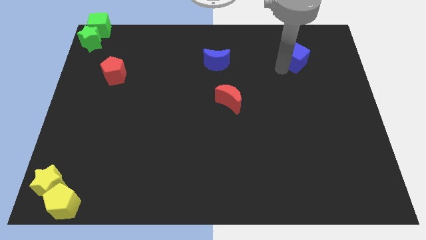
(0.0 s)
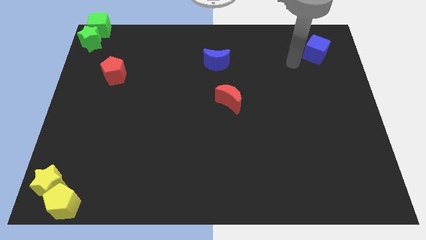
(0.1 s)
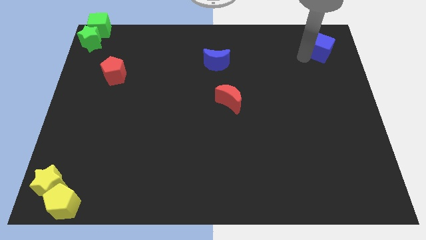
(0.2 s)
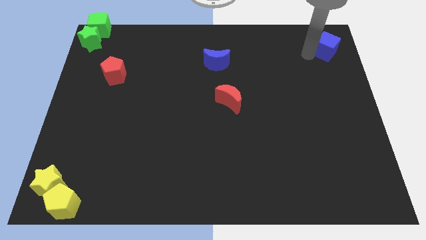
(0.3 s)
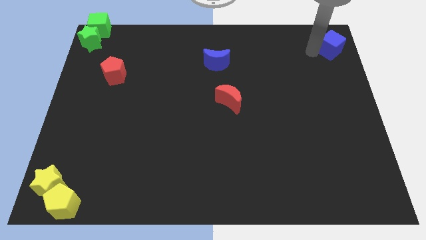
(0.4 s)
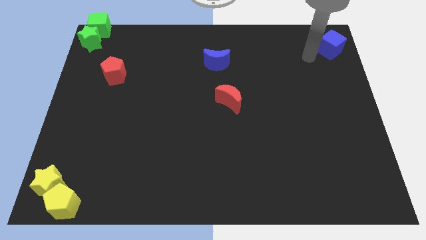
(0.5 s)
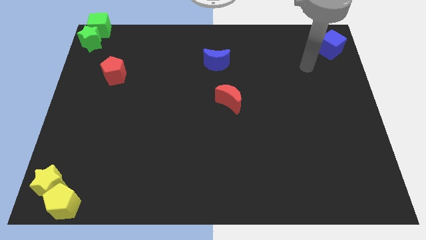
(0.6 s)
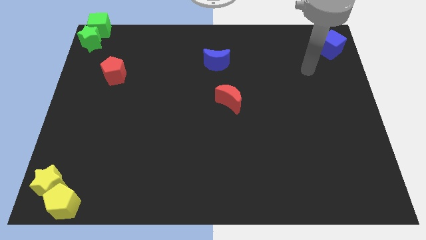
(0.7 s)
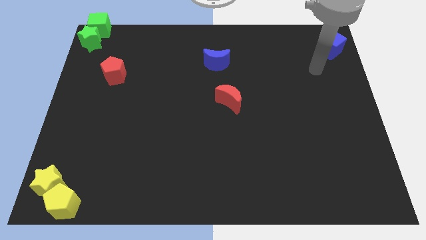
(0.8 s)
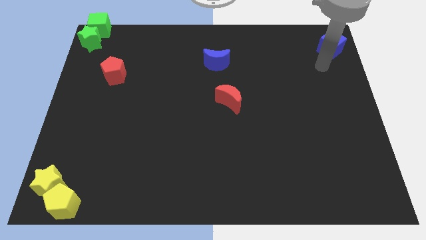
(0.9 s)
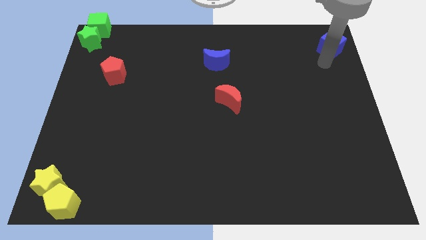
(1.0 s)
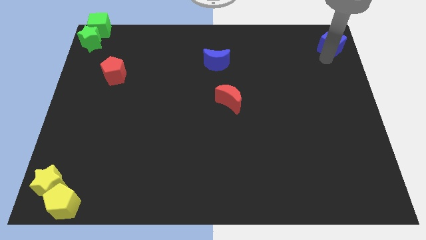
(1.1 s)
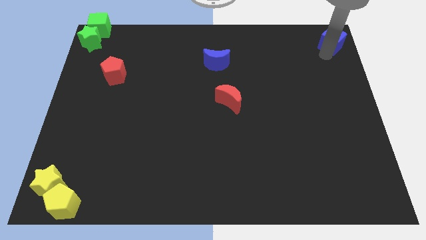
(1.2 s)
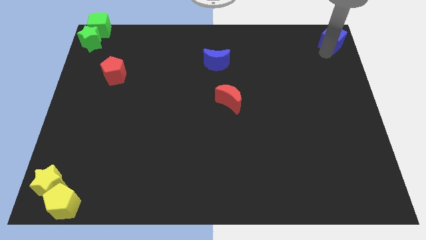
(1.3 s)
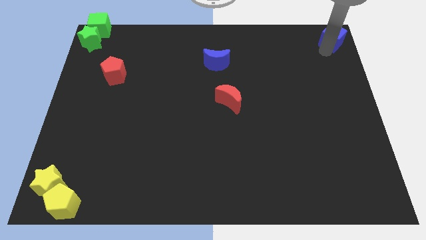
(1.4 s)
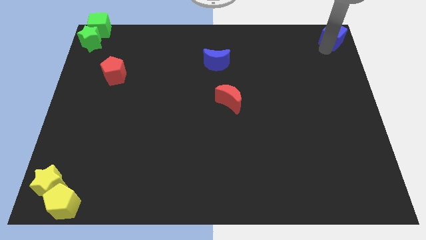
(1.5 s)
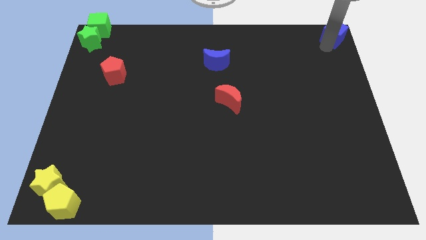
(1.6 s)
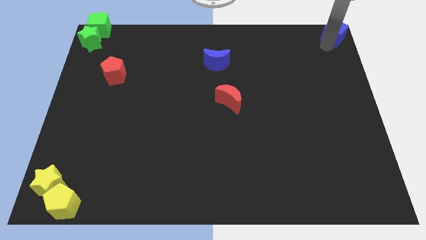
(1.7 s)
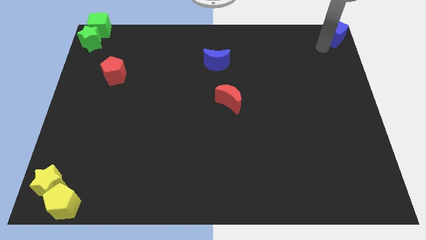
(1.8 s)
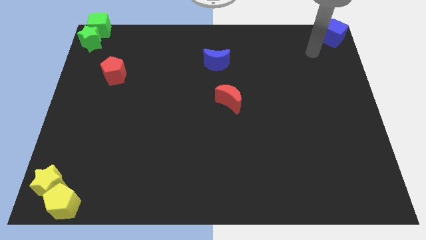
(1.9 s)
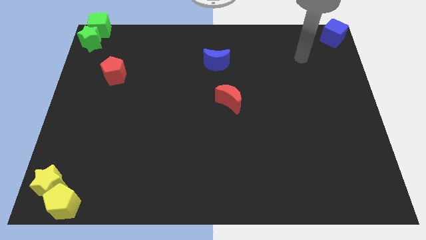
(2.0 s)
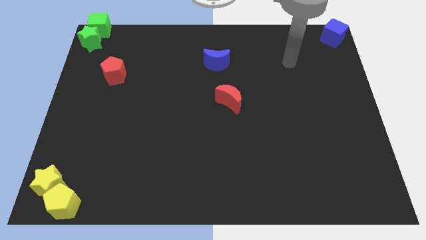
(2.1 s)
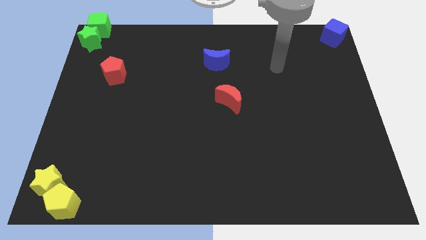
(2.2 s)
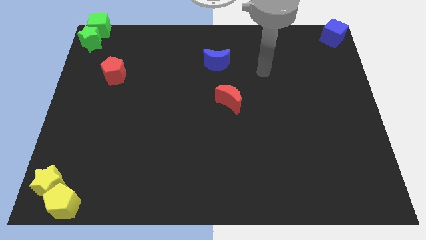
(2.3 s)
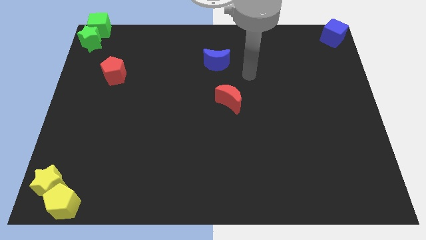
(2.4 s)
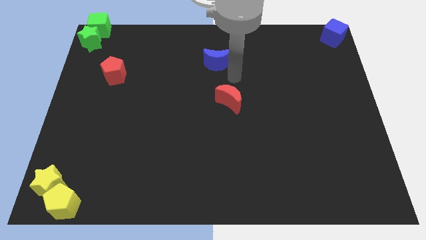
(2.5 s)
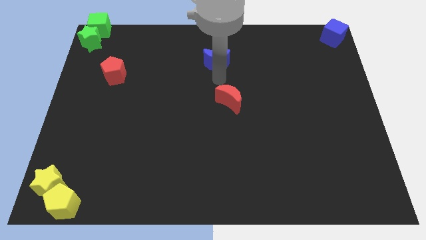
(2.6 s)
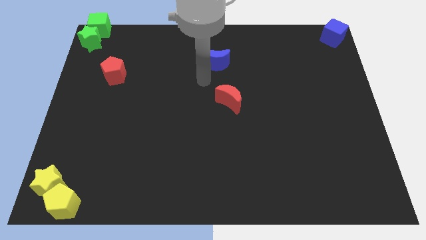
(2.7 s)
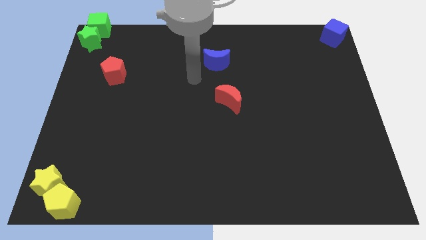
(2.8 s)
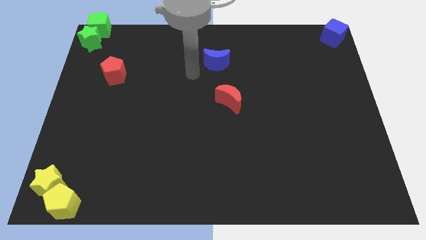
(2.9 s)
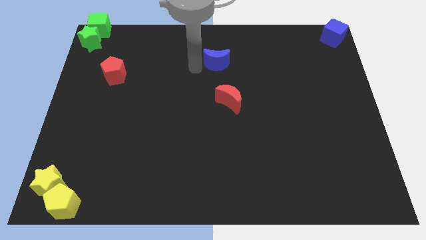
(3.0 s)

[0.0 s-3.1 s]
place the blue cube to the top right

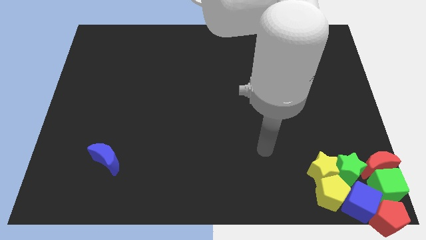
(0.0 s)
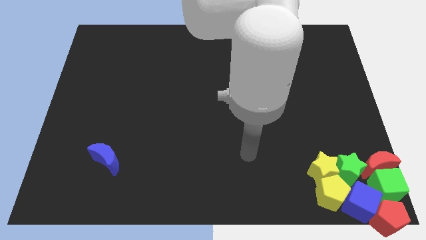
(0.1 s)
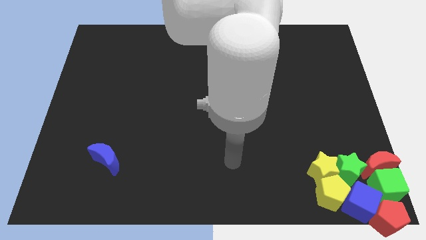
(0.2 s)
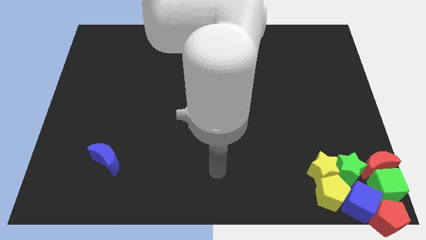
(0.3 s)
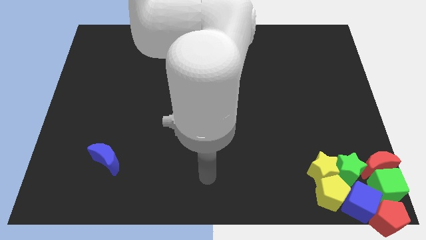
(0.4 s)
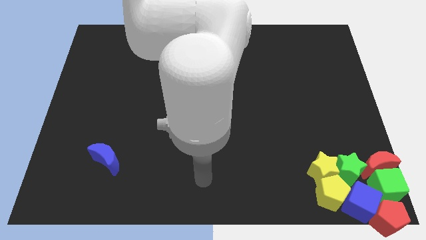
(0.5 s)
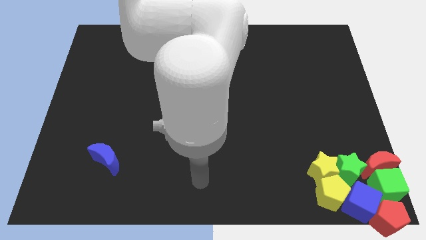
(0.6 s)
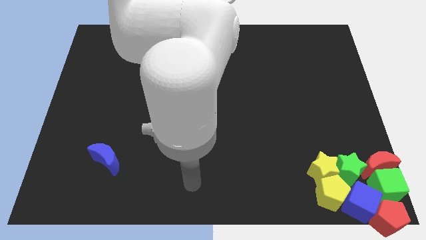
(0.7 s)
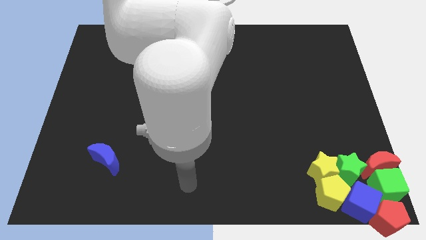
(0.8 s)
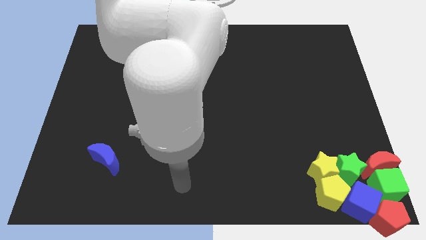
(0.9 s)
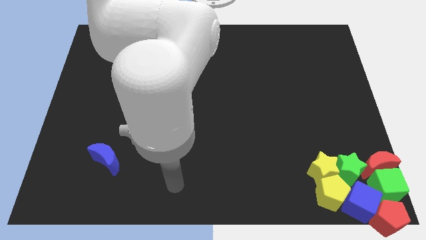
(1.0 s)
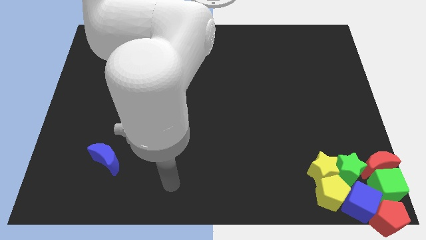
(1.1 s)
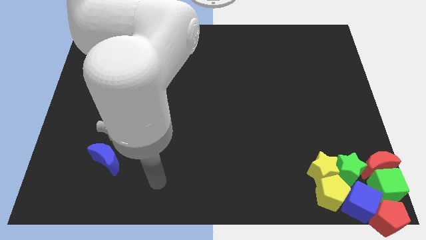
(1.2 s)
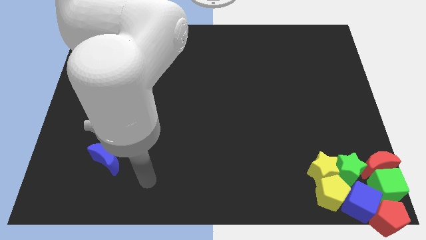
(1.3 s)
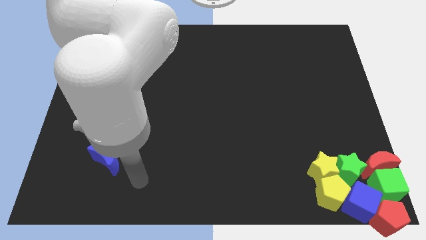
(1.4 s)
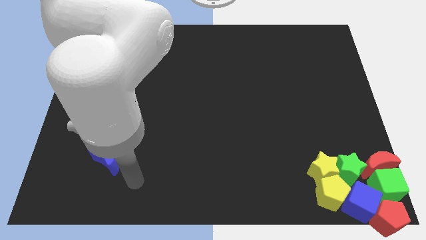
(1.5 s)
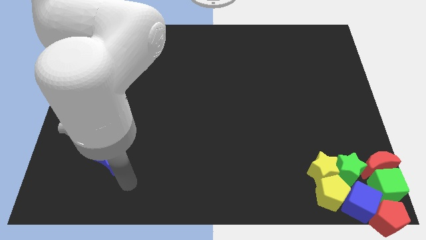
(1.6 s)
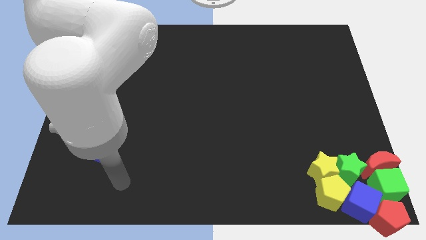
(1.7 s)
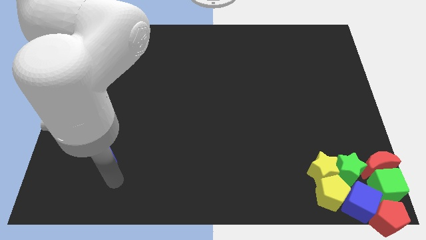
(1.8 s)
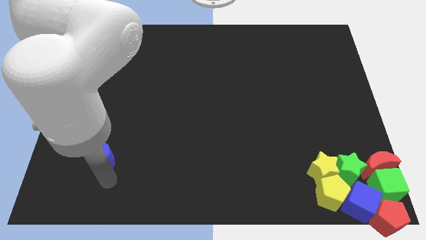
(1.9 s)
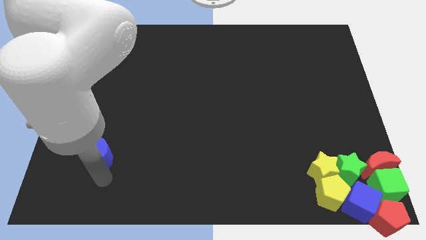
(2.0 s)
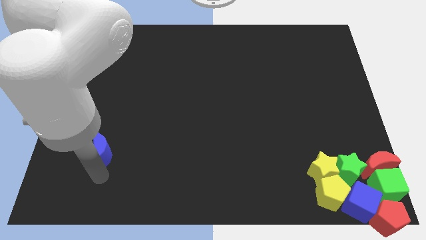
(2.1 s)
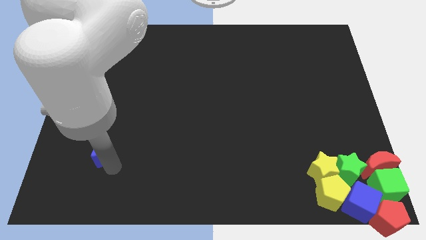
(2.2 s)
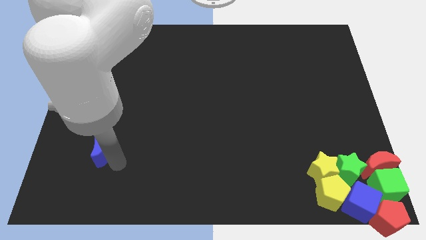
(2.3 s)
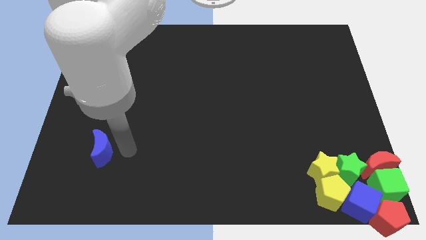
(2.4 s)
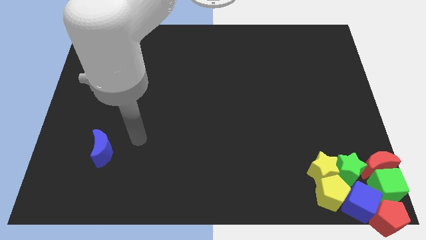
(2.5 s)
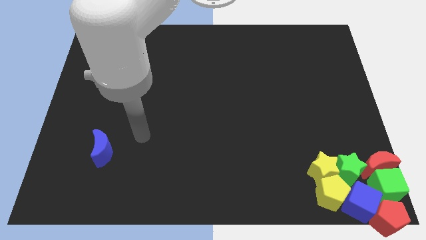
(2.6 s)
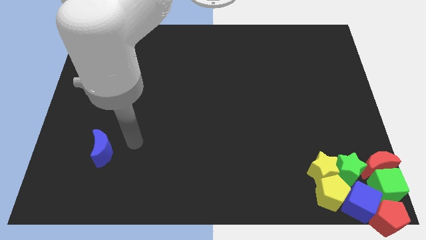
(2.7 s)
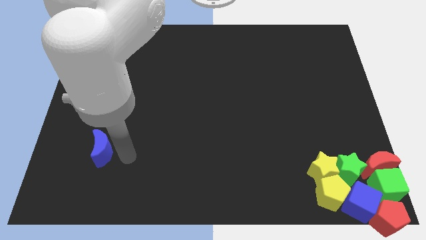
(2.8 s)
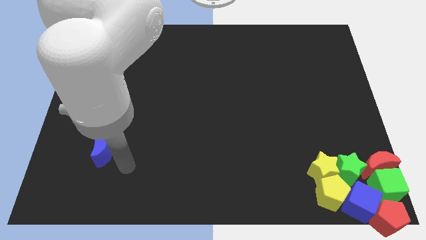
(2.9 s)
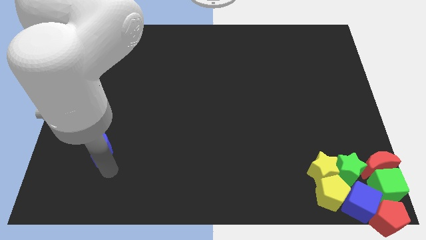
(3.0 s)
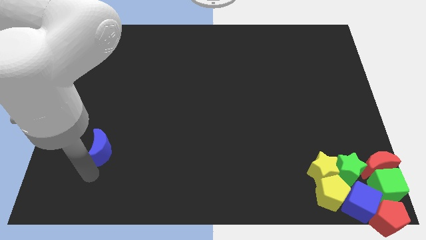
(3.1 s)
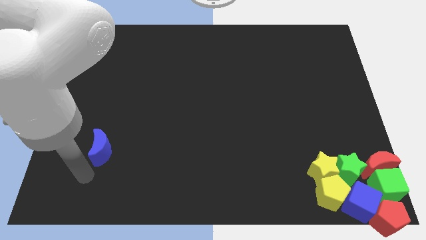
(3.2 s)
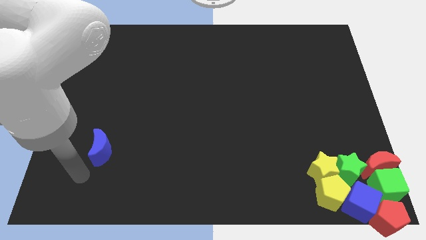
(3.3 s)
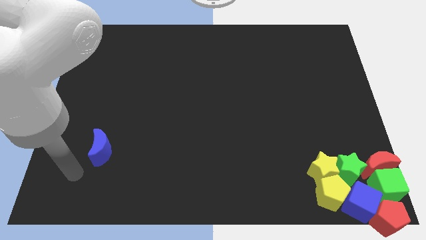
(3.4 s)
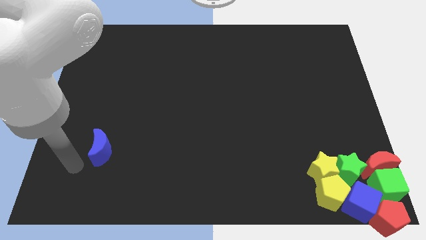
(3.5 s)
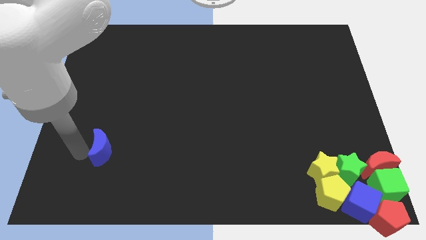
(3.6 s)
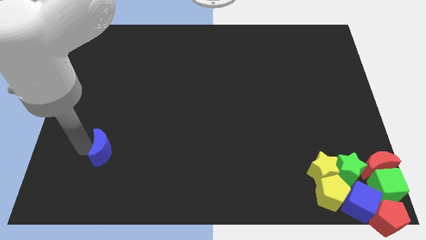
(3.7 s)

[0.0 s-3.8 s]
place the arm to the left of the blue moon

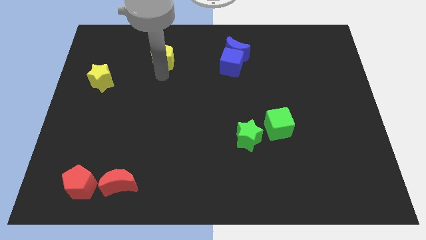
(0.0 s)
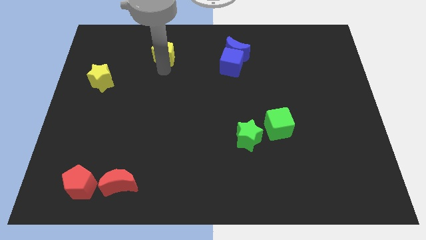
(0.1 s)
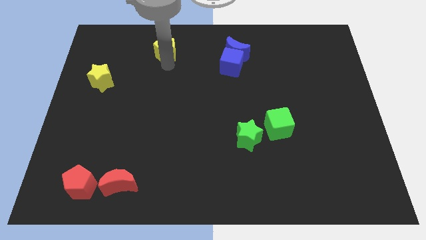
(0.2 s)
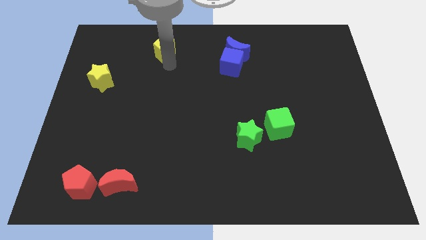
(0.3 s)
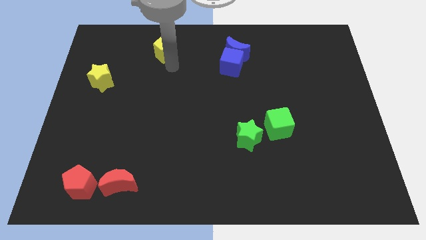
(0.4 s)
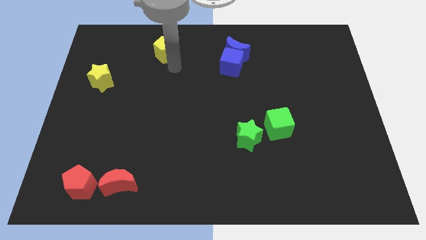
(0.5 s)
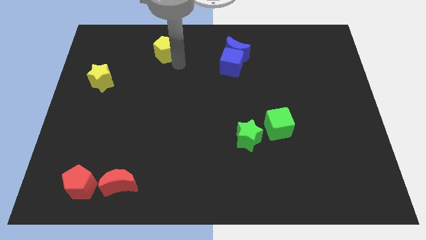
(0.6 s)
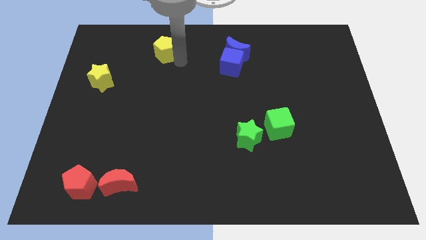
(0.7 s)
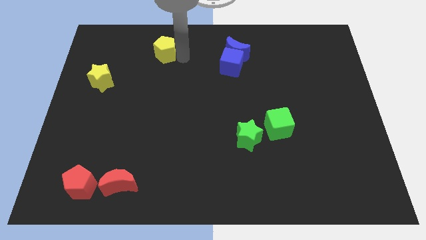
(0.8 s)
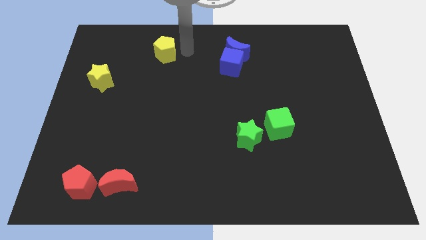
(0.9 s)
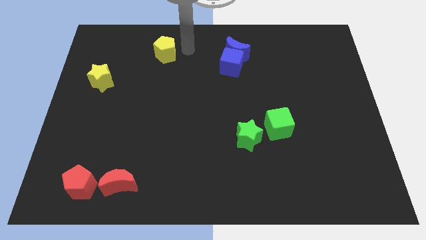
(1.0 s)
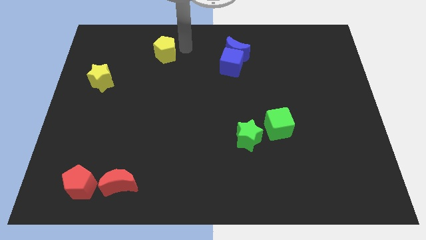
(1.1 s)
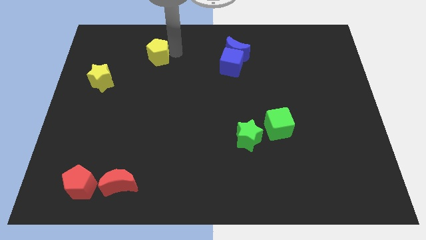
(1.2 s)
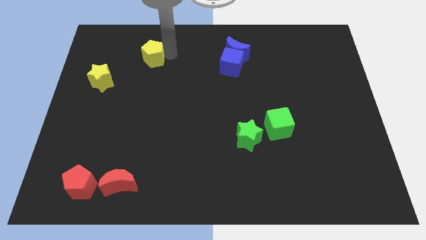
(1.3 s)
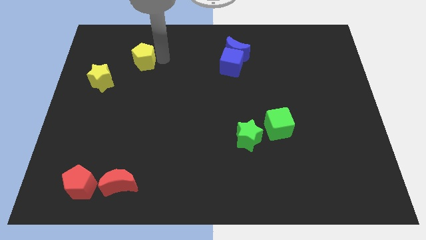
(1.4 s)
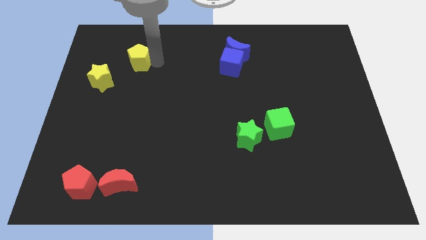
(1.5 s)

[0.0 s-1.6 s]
push the yellow pentagon to the left of the board slightly

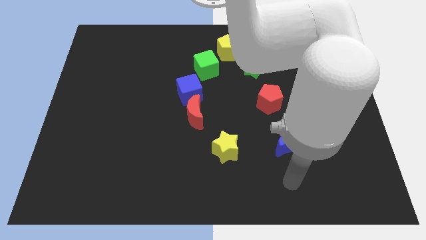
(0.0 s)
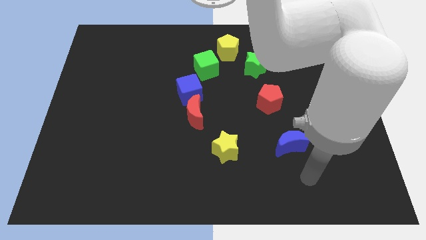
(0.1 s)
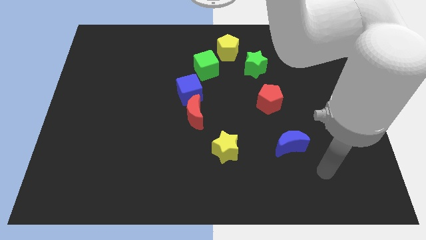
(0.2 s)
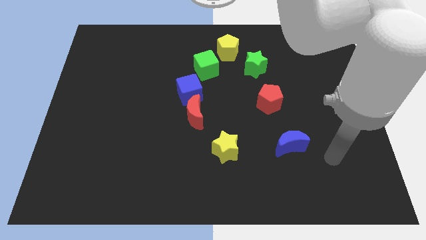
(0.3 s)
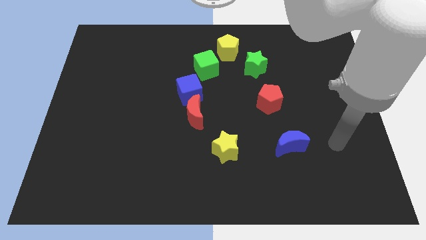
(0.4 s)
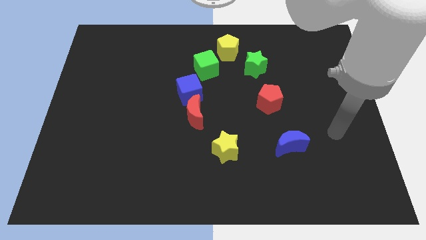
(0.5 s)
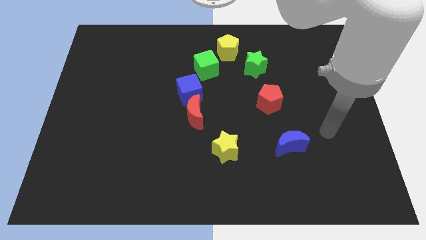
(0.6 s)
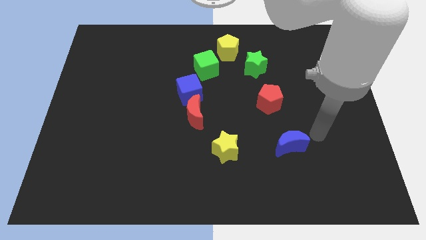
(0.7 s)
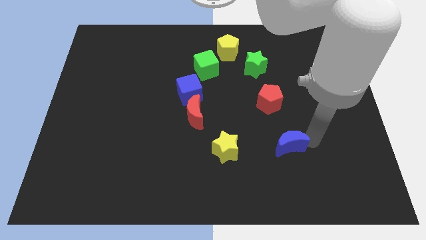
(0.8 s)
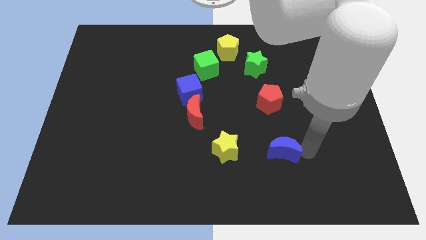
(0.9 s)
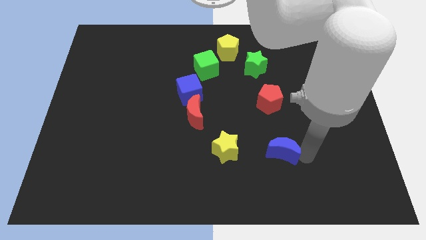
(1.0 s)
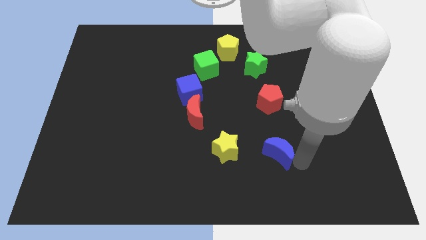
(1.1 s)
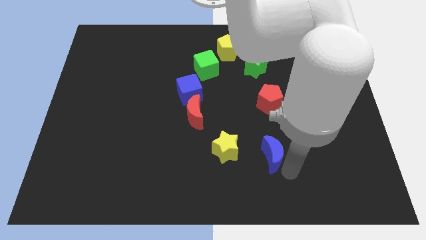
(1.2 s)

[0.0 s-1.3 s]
move blue moon to the bottom of red pentagon
